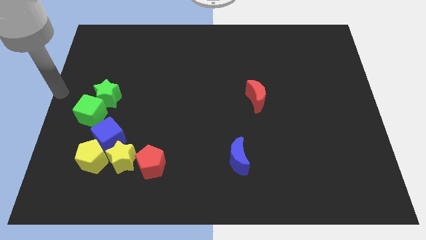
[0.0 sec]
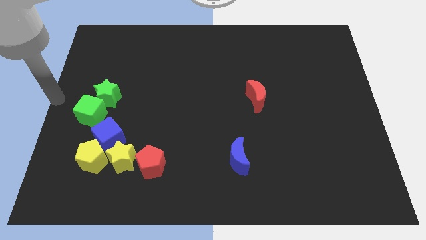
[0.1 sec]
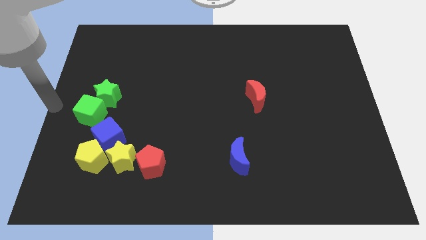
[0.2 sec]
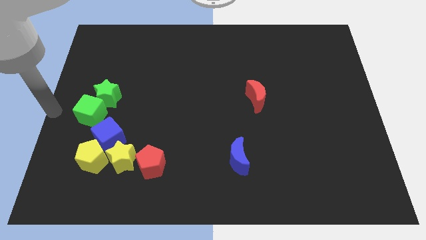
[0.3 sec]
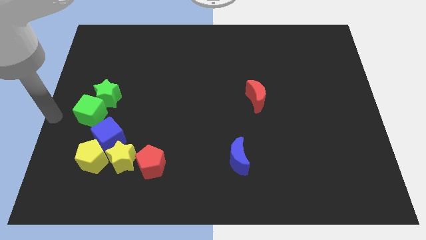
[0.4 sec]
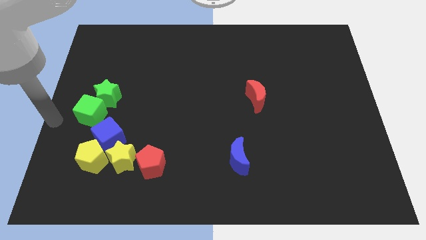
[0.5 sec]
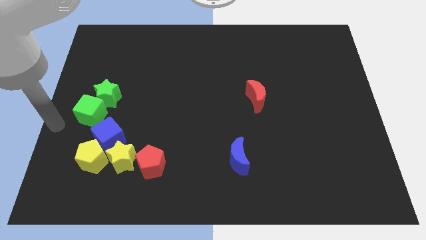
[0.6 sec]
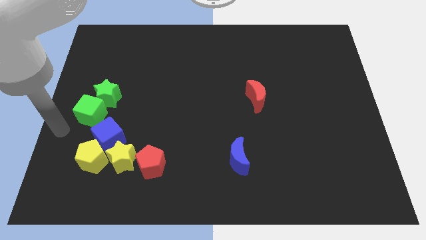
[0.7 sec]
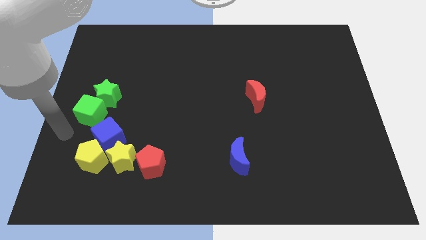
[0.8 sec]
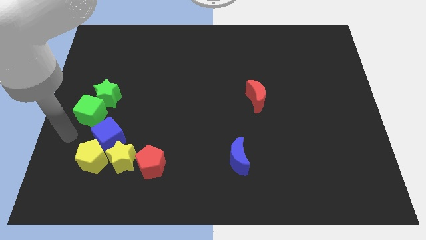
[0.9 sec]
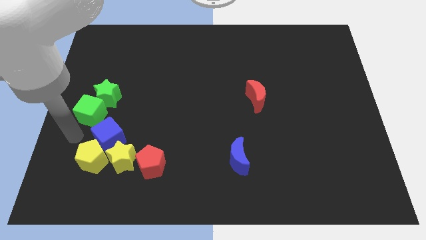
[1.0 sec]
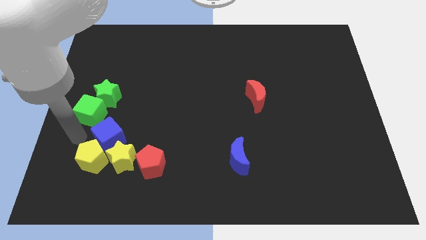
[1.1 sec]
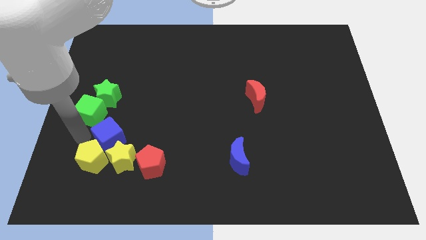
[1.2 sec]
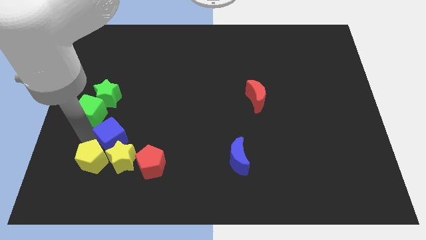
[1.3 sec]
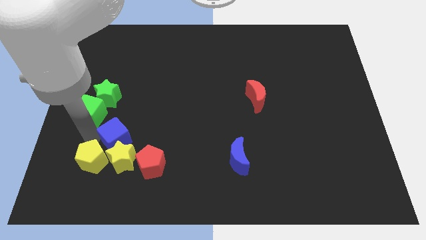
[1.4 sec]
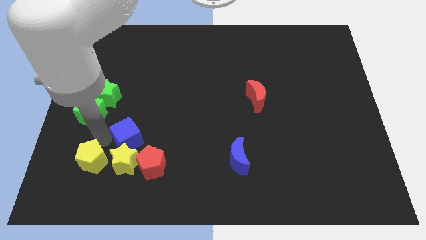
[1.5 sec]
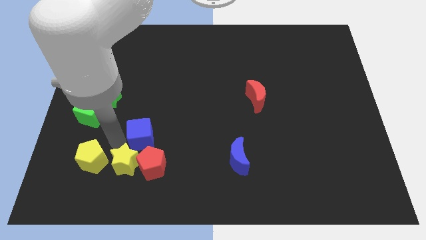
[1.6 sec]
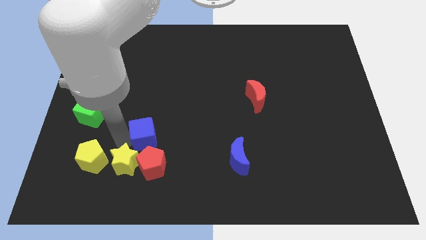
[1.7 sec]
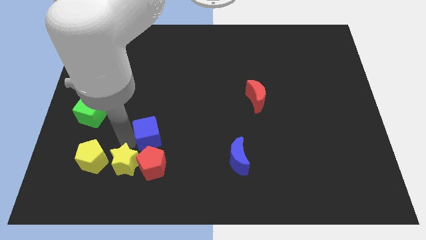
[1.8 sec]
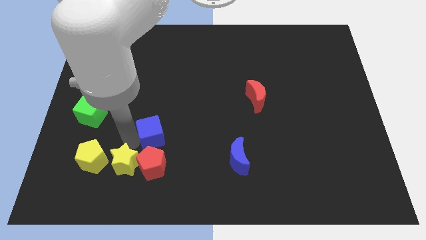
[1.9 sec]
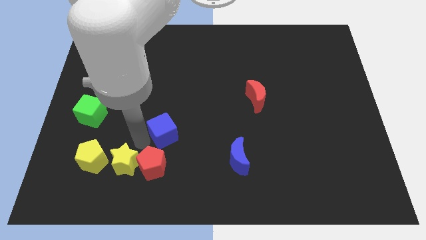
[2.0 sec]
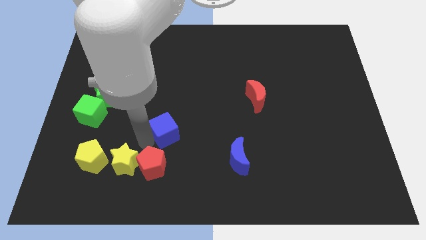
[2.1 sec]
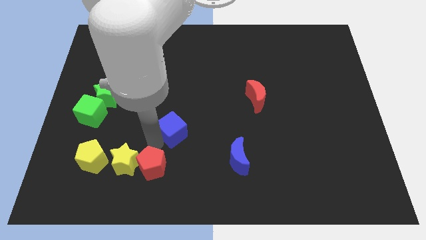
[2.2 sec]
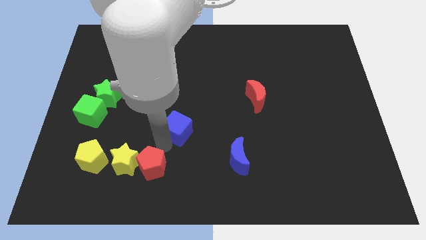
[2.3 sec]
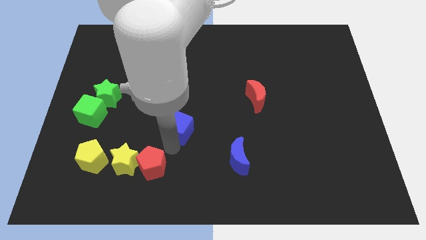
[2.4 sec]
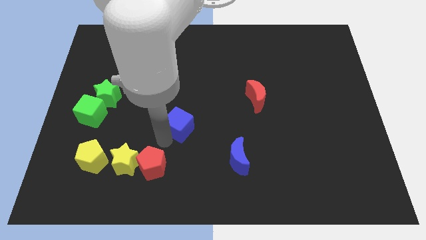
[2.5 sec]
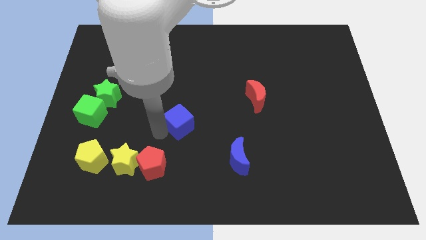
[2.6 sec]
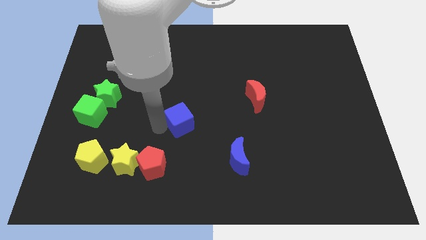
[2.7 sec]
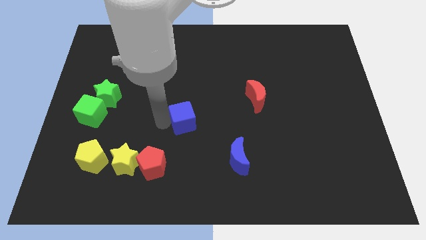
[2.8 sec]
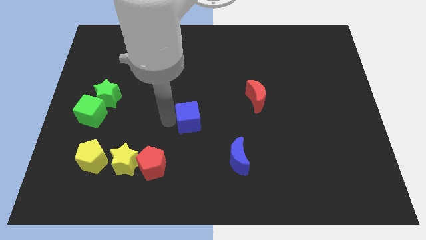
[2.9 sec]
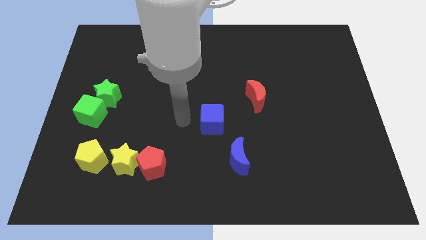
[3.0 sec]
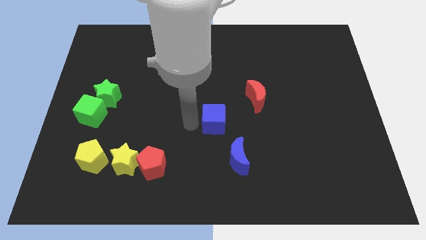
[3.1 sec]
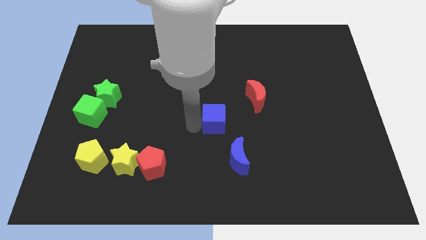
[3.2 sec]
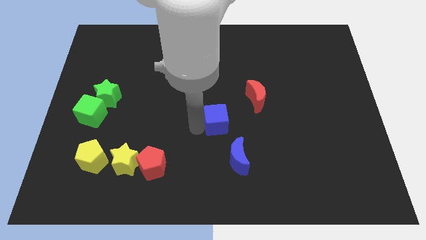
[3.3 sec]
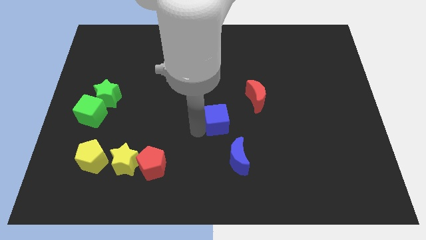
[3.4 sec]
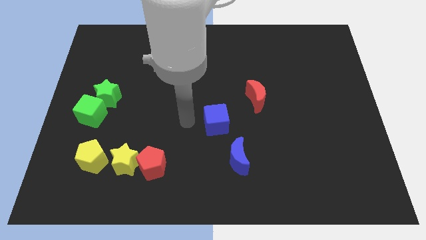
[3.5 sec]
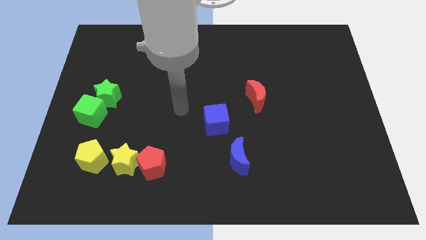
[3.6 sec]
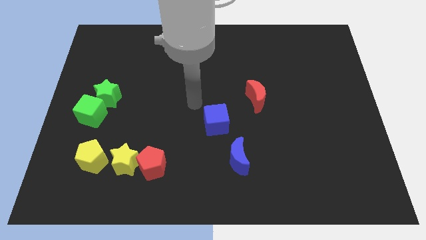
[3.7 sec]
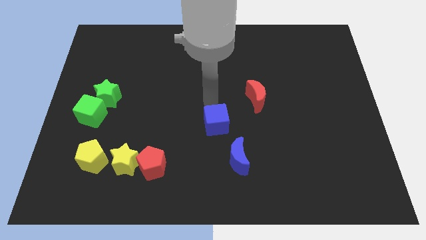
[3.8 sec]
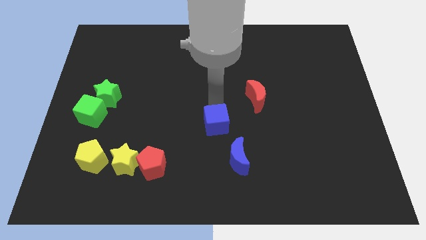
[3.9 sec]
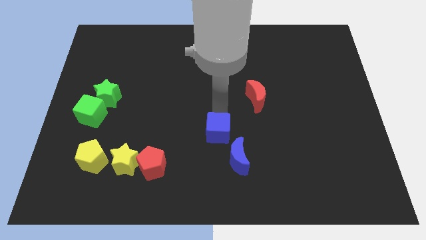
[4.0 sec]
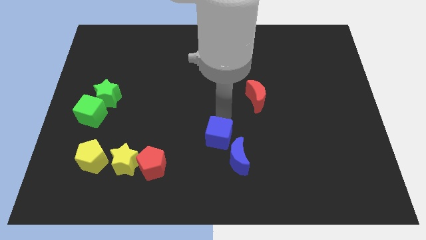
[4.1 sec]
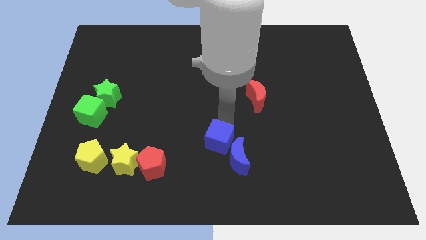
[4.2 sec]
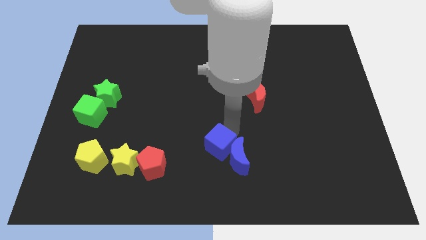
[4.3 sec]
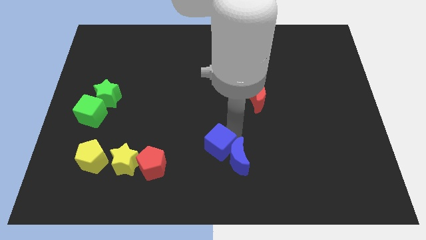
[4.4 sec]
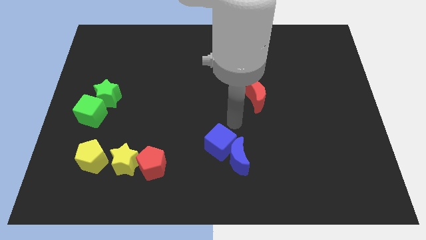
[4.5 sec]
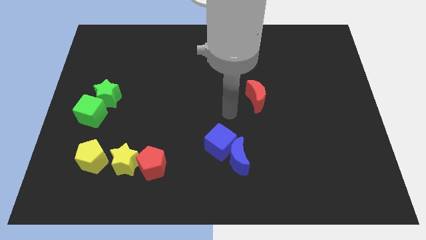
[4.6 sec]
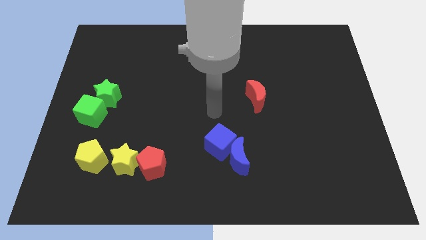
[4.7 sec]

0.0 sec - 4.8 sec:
group the blue blocks at the bottom side of the board

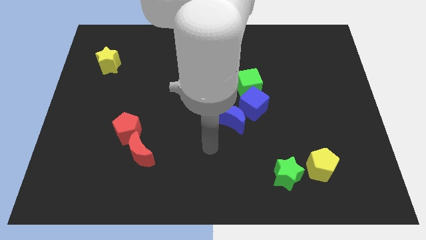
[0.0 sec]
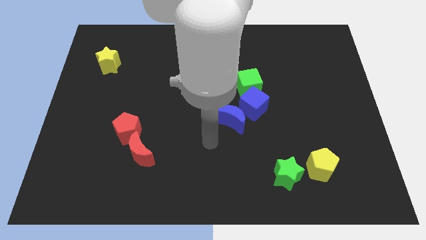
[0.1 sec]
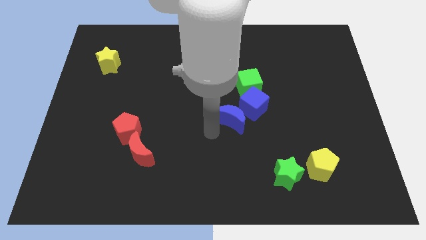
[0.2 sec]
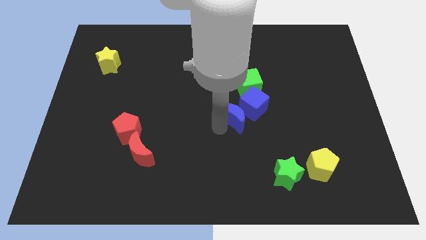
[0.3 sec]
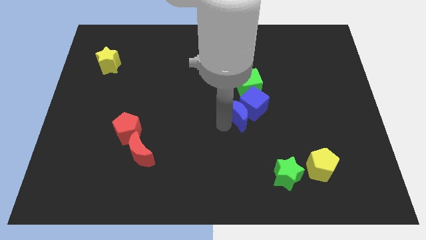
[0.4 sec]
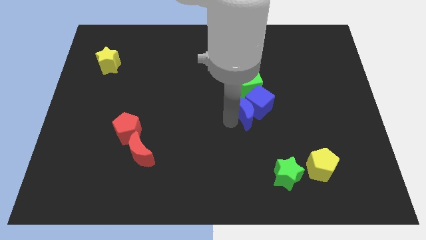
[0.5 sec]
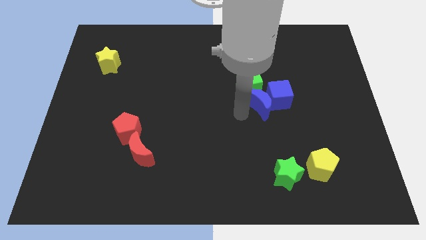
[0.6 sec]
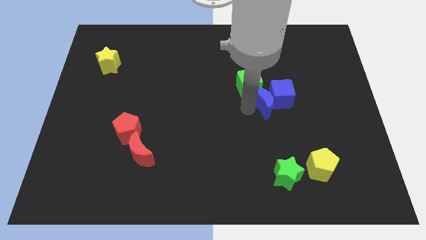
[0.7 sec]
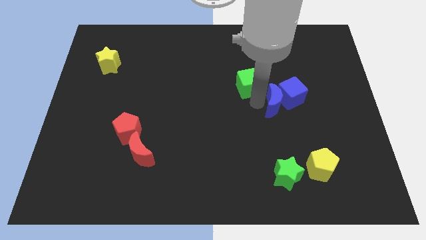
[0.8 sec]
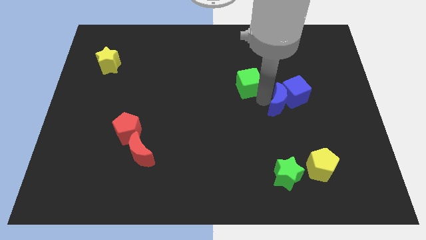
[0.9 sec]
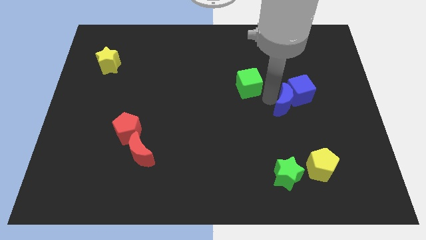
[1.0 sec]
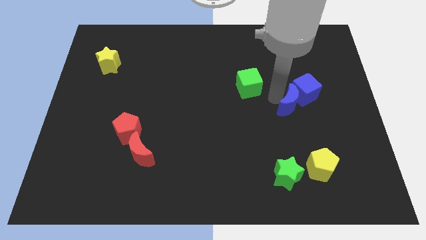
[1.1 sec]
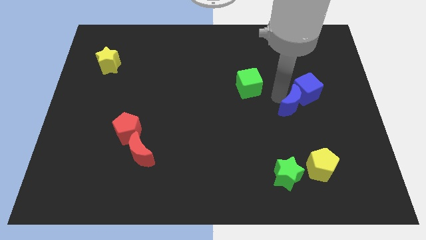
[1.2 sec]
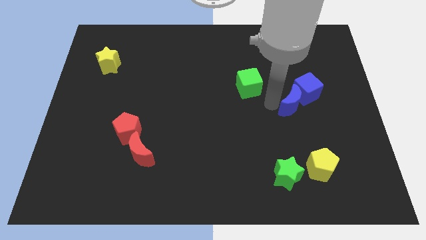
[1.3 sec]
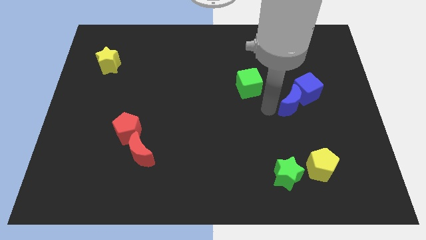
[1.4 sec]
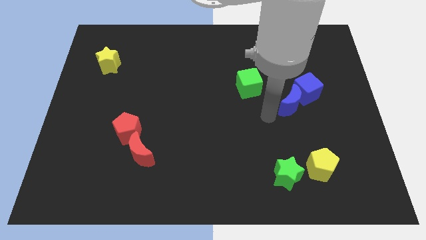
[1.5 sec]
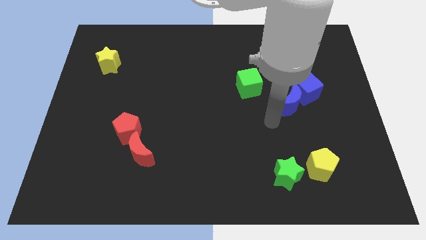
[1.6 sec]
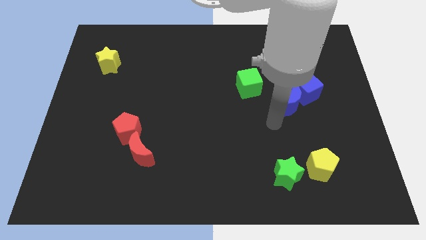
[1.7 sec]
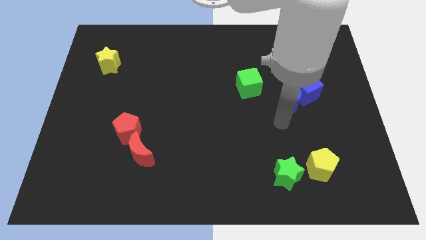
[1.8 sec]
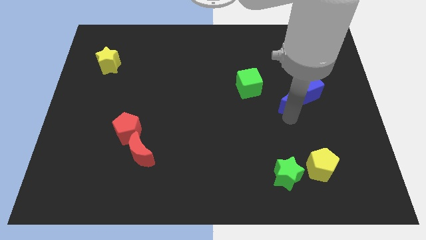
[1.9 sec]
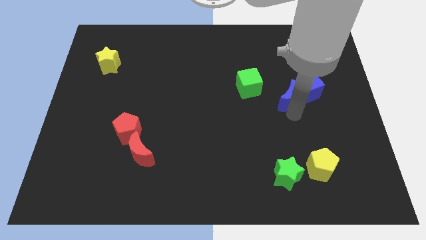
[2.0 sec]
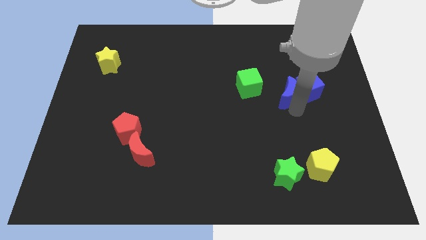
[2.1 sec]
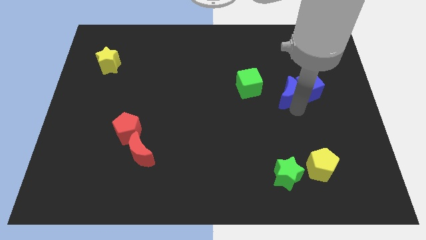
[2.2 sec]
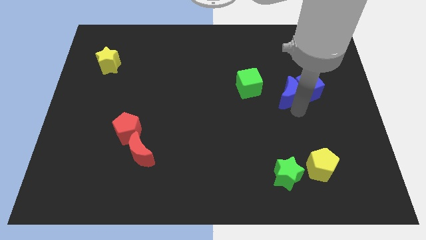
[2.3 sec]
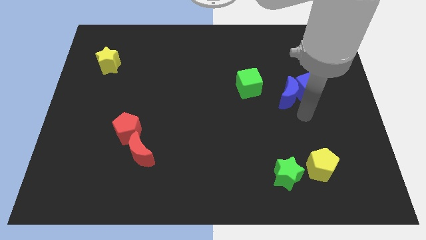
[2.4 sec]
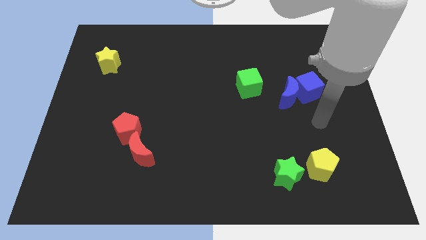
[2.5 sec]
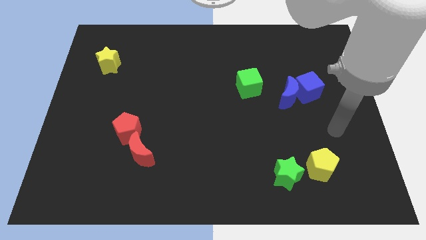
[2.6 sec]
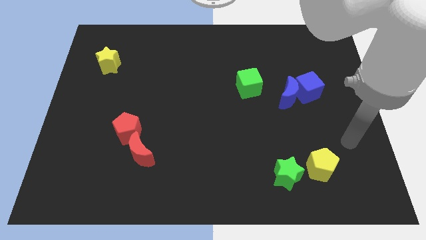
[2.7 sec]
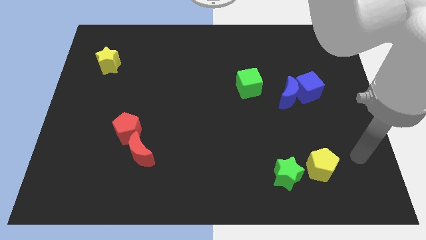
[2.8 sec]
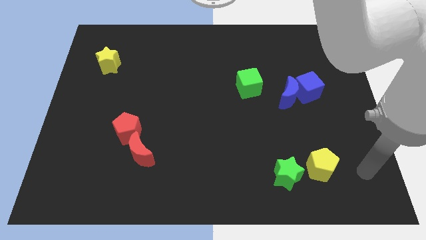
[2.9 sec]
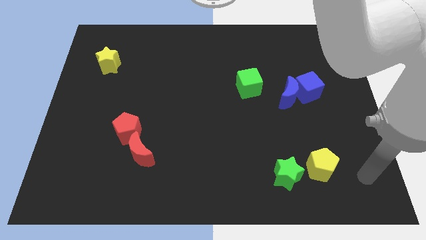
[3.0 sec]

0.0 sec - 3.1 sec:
push the blue blocks towards the center right

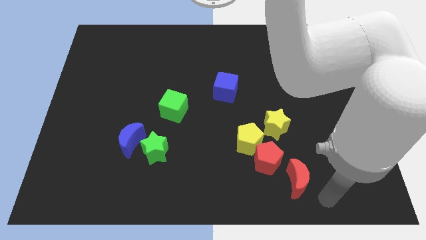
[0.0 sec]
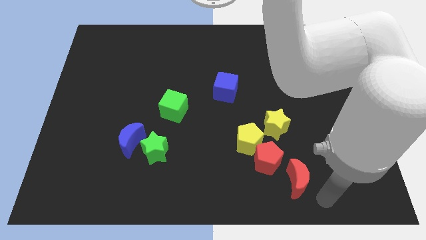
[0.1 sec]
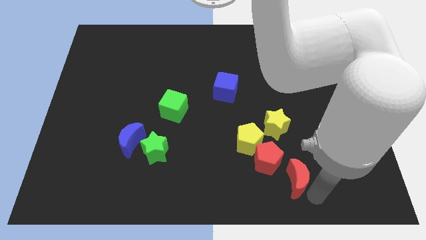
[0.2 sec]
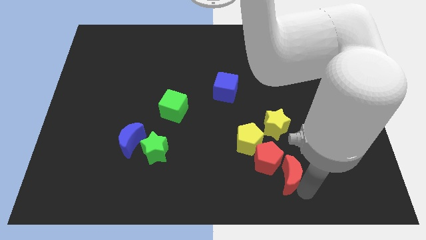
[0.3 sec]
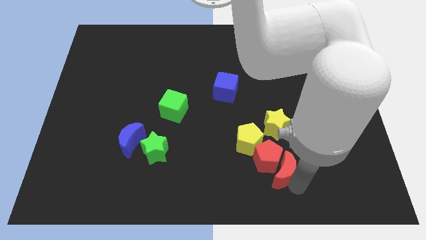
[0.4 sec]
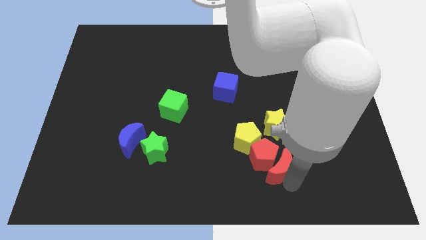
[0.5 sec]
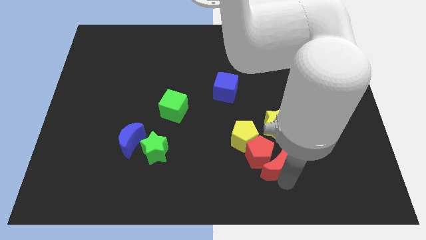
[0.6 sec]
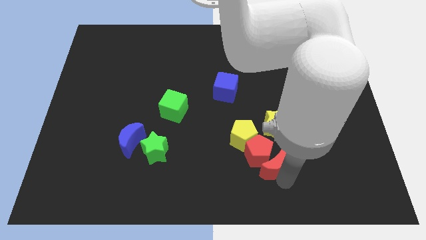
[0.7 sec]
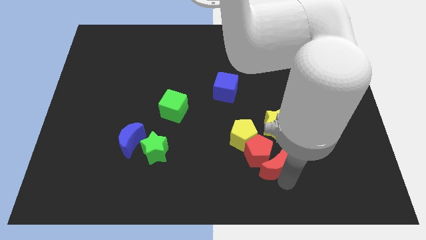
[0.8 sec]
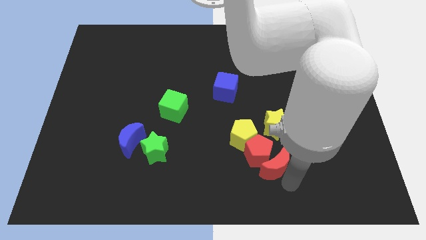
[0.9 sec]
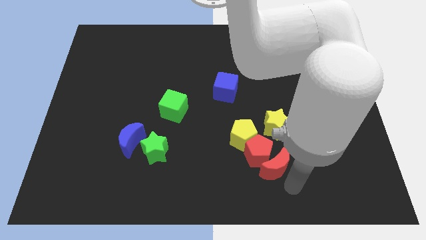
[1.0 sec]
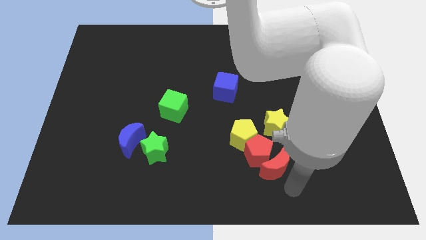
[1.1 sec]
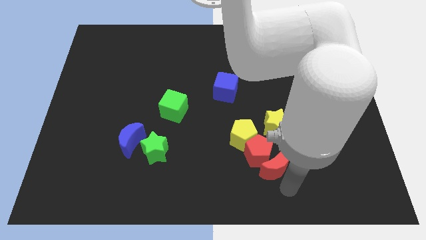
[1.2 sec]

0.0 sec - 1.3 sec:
push the red crescent into the red pentagon
